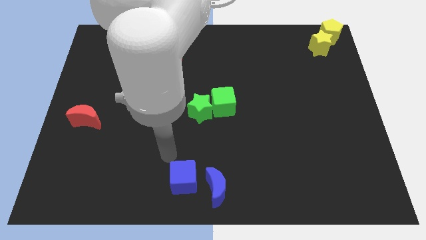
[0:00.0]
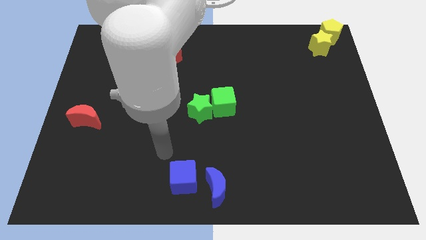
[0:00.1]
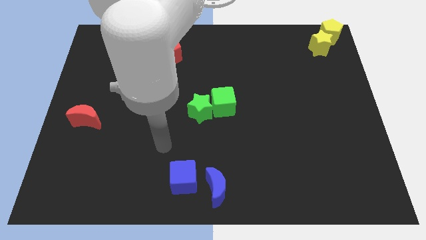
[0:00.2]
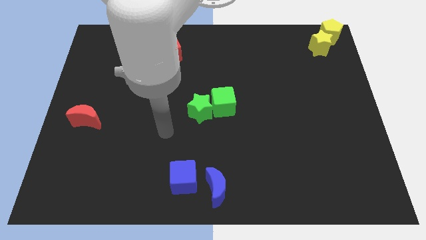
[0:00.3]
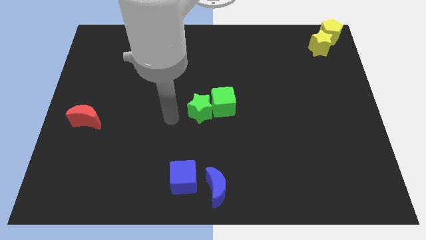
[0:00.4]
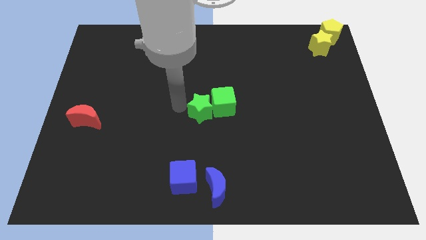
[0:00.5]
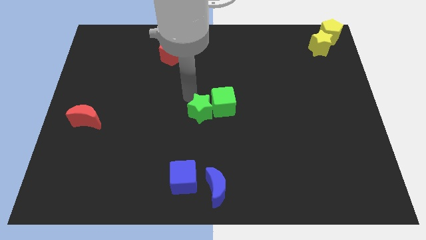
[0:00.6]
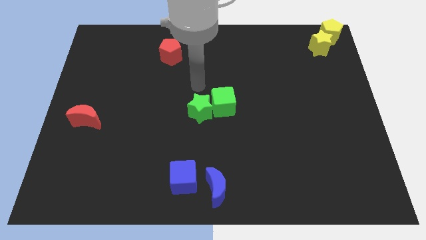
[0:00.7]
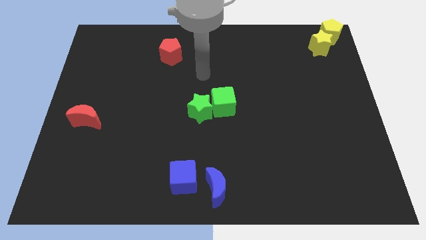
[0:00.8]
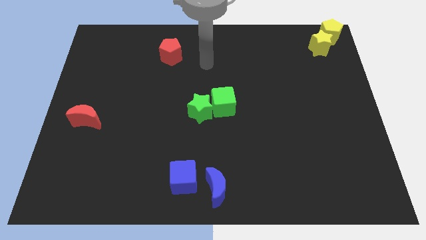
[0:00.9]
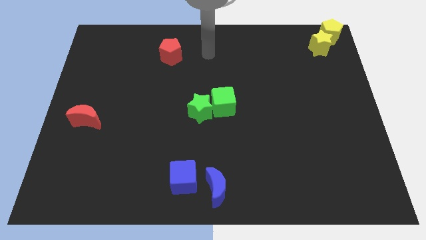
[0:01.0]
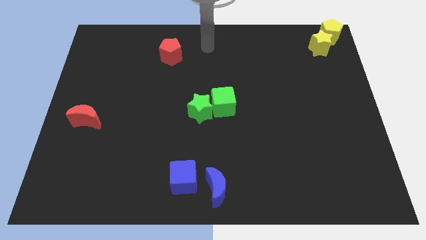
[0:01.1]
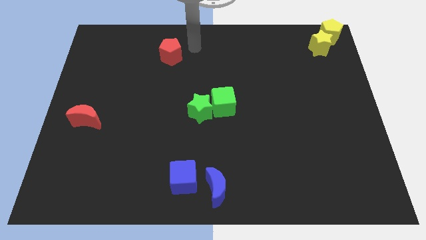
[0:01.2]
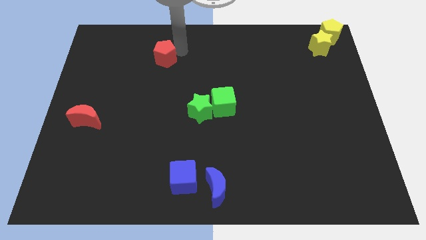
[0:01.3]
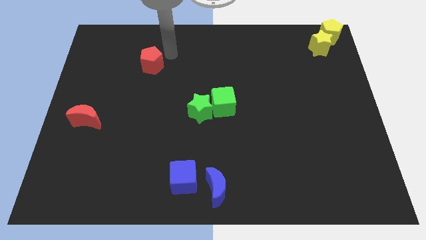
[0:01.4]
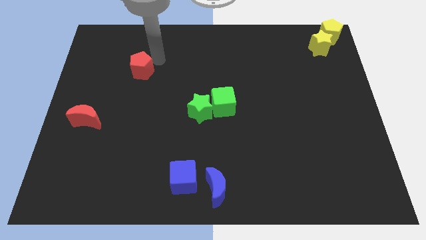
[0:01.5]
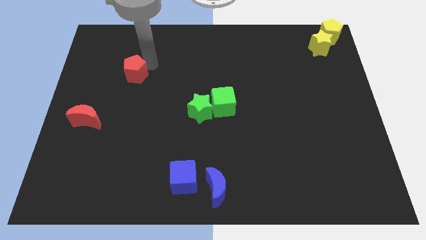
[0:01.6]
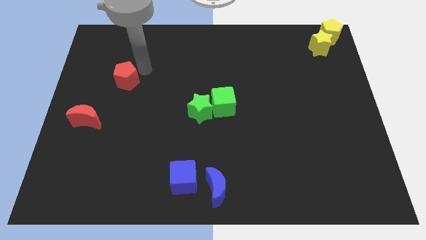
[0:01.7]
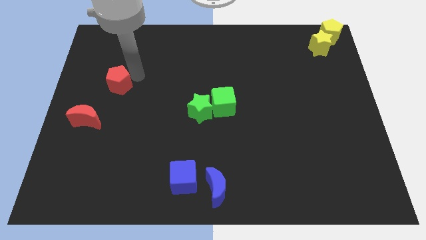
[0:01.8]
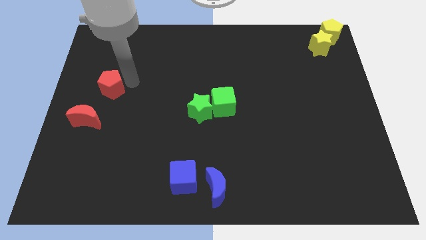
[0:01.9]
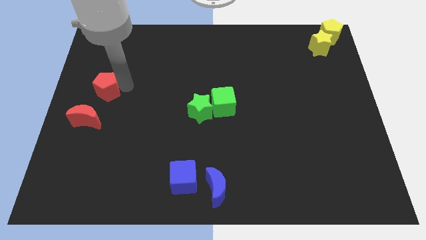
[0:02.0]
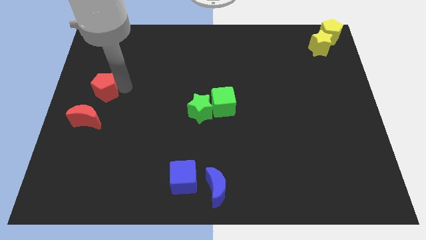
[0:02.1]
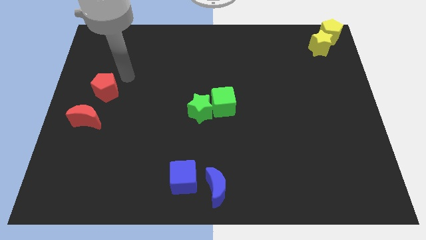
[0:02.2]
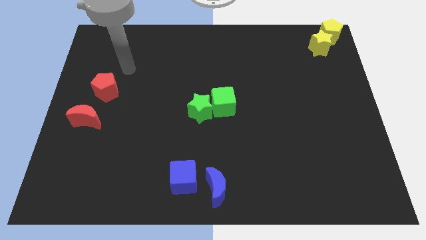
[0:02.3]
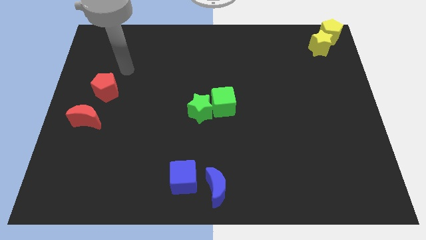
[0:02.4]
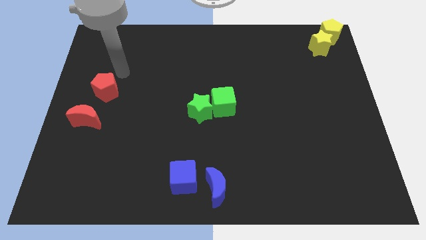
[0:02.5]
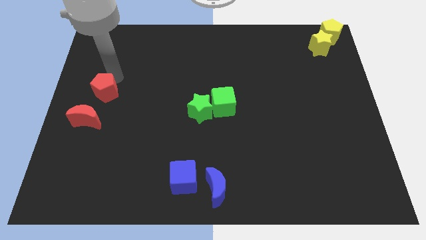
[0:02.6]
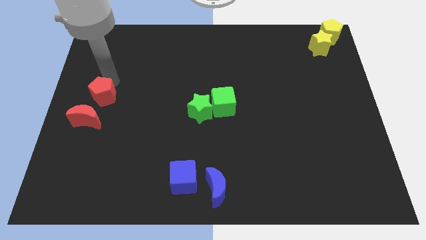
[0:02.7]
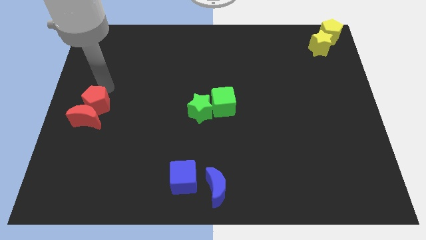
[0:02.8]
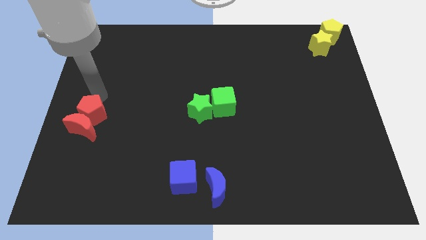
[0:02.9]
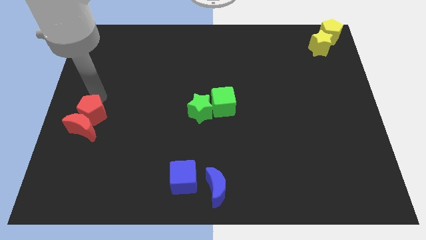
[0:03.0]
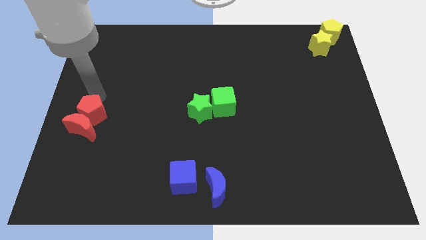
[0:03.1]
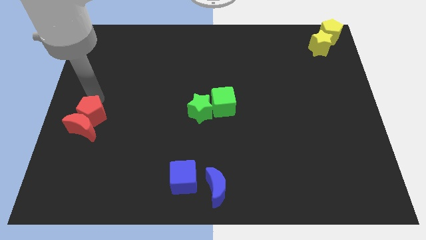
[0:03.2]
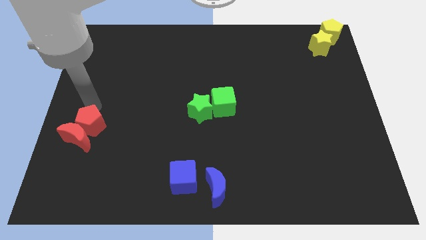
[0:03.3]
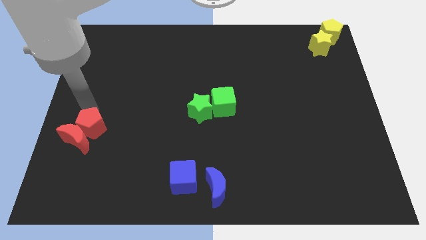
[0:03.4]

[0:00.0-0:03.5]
slide the red pentagon into the red moon

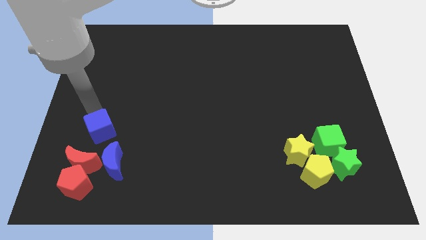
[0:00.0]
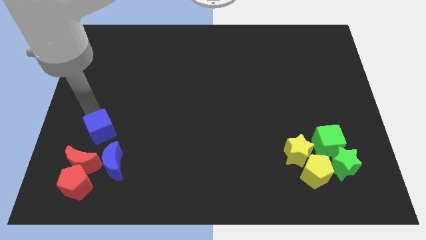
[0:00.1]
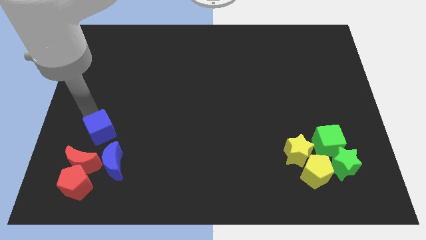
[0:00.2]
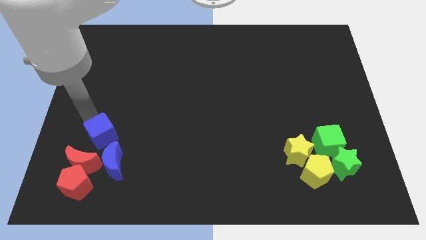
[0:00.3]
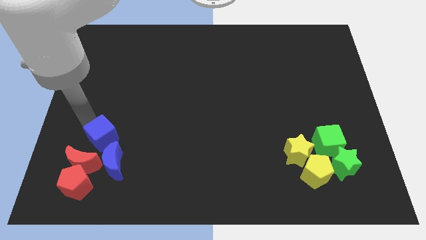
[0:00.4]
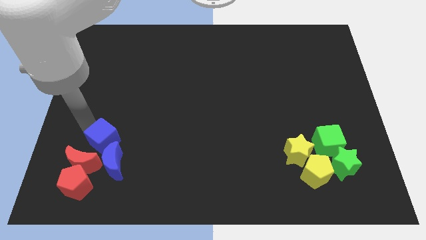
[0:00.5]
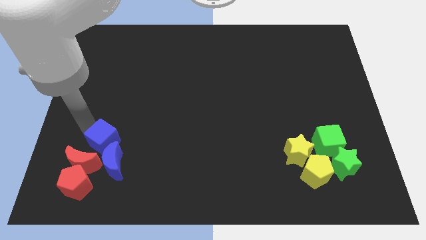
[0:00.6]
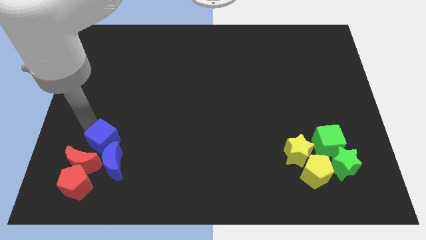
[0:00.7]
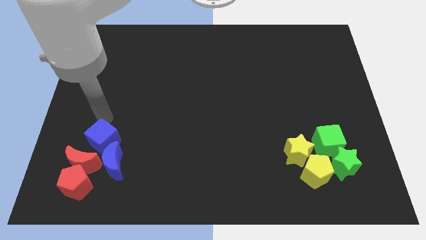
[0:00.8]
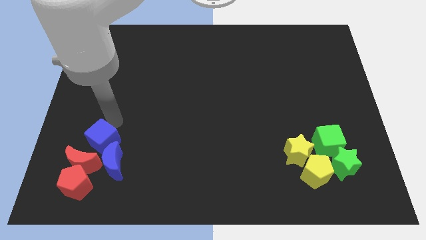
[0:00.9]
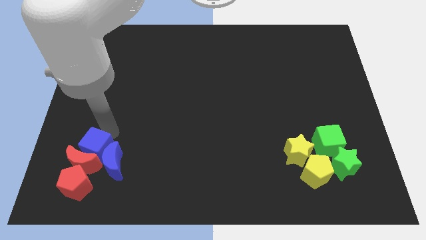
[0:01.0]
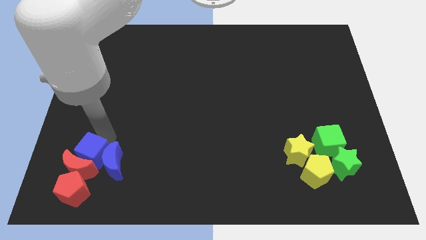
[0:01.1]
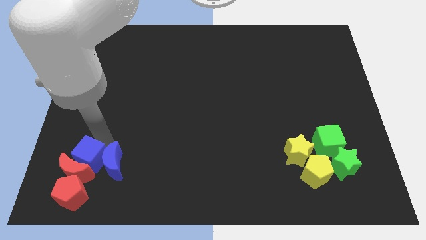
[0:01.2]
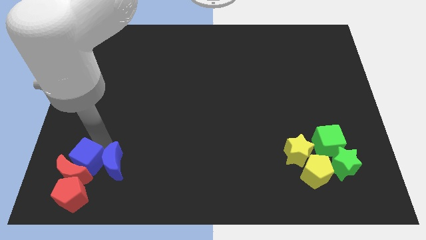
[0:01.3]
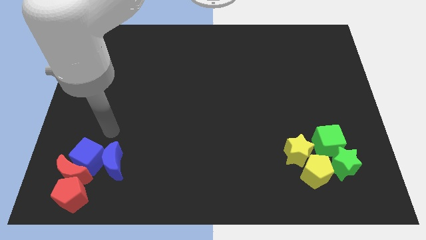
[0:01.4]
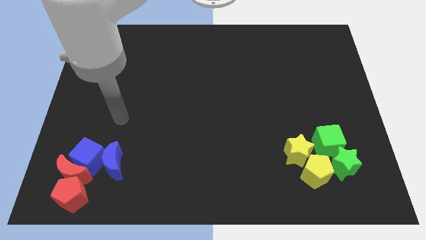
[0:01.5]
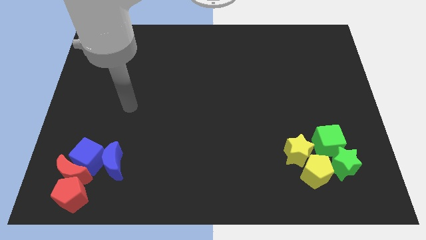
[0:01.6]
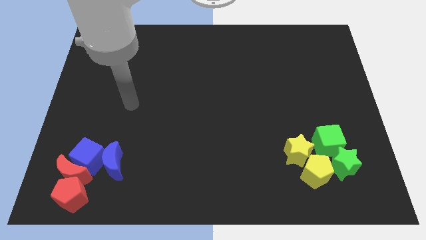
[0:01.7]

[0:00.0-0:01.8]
move the blue cube into the red crescent

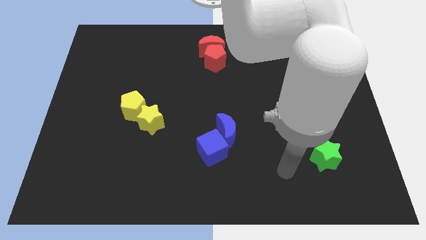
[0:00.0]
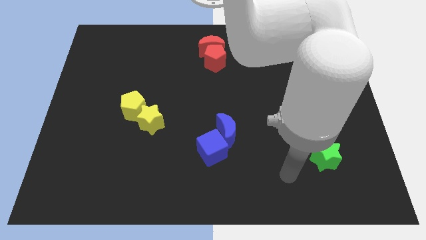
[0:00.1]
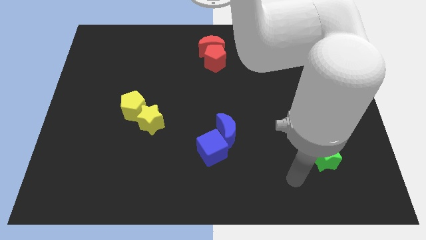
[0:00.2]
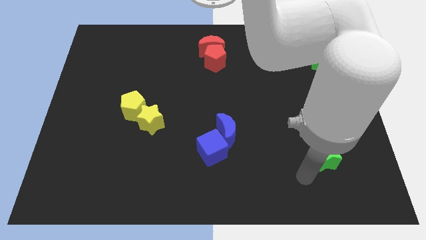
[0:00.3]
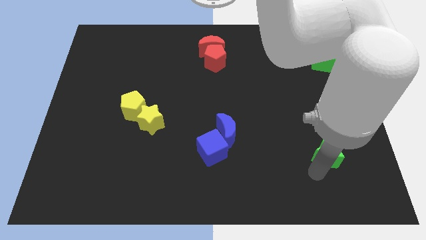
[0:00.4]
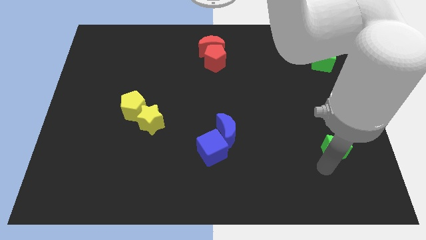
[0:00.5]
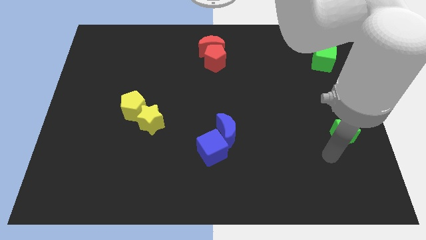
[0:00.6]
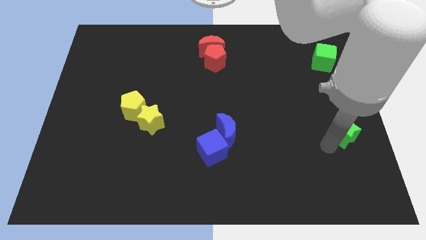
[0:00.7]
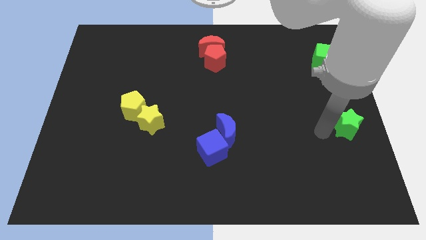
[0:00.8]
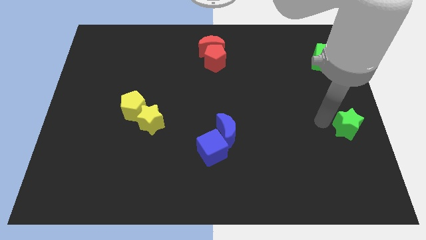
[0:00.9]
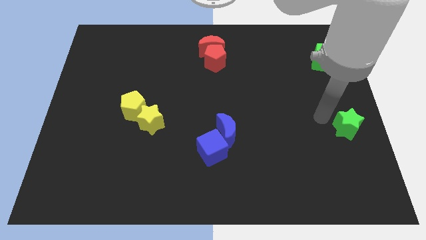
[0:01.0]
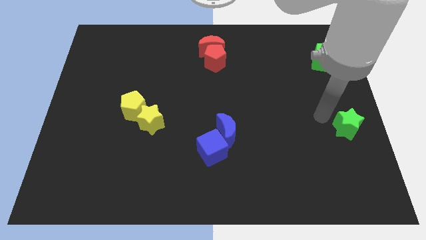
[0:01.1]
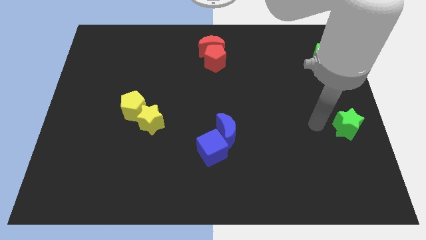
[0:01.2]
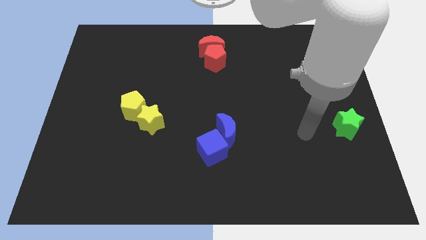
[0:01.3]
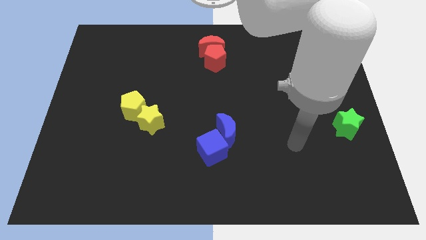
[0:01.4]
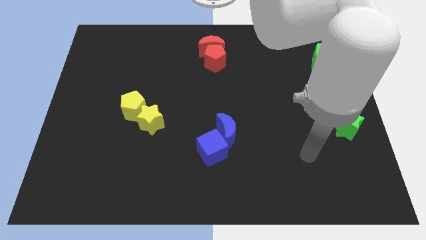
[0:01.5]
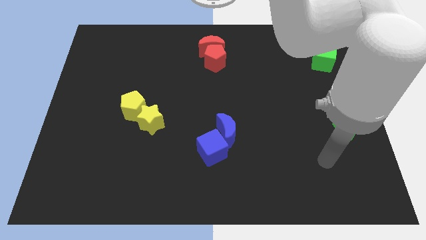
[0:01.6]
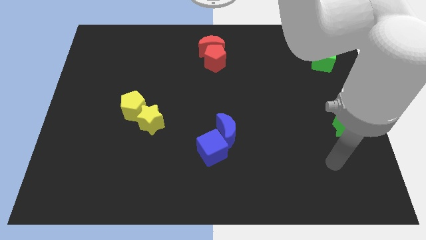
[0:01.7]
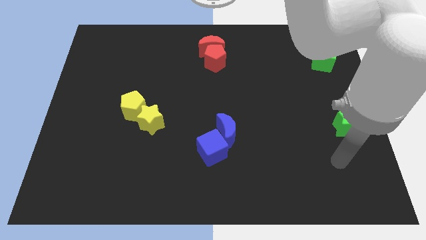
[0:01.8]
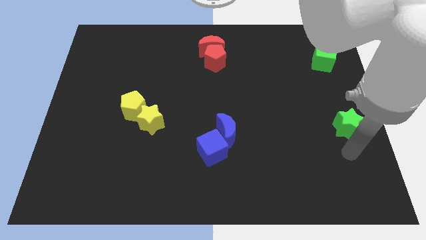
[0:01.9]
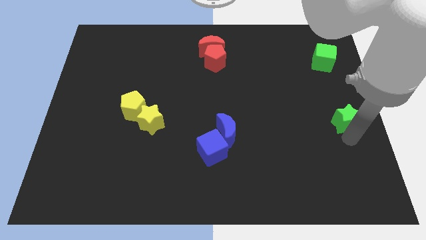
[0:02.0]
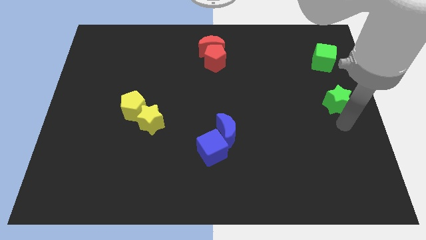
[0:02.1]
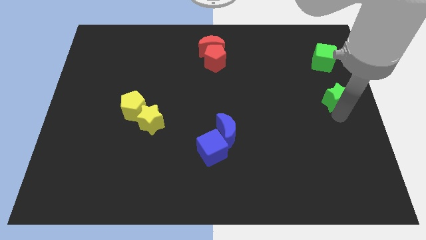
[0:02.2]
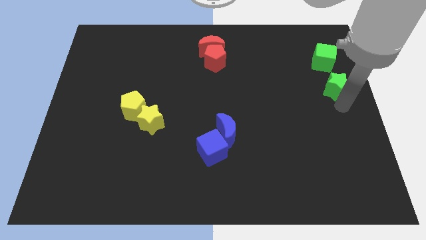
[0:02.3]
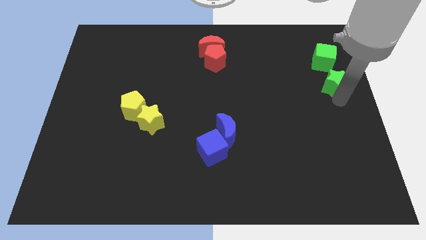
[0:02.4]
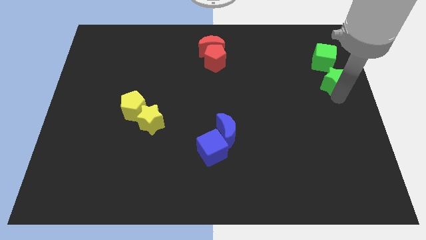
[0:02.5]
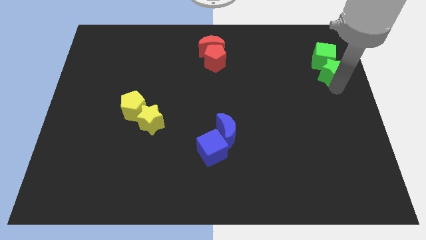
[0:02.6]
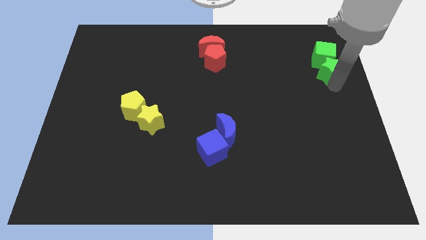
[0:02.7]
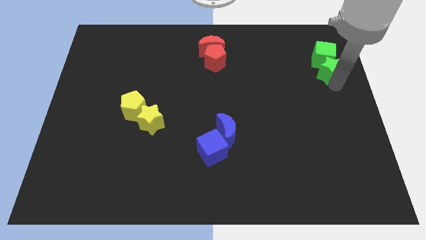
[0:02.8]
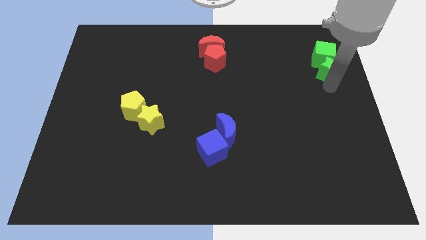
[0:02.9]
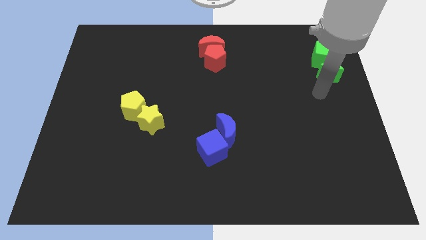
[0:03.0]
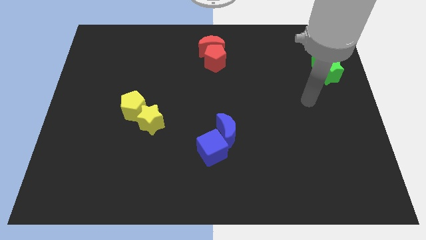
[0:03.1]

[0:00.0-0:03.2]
push green star into green cube

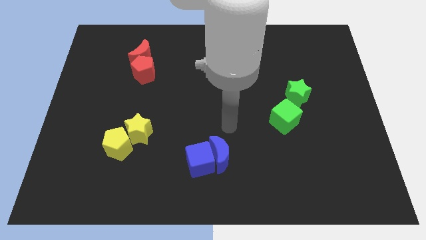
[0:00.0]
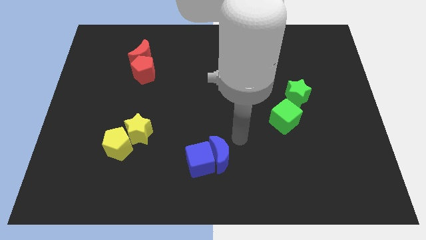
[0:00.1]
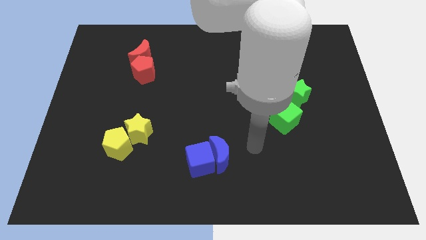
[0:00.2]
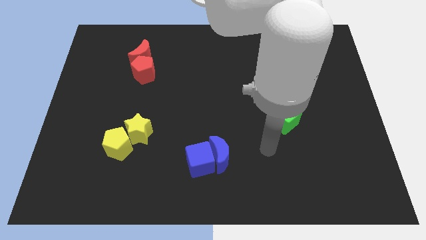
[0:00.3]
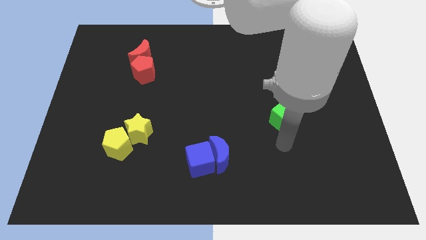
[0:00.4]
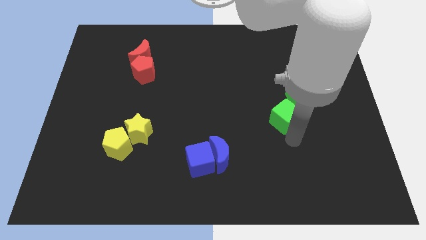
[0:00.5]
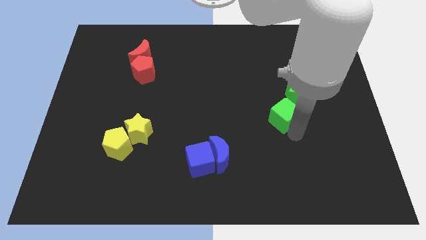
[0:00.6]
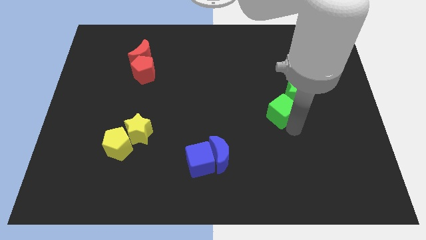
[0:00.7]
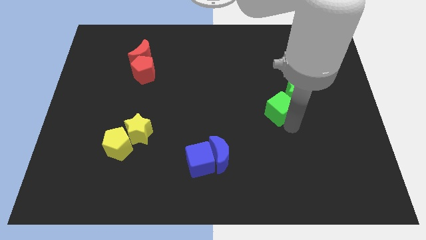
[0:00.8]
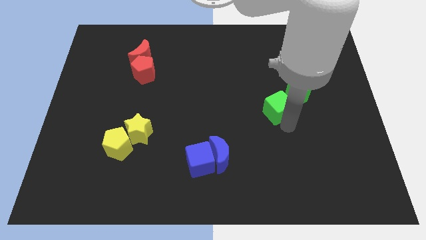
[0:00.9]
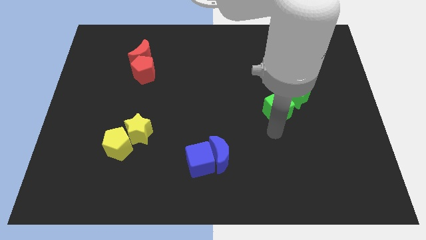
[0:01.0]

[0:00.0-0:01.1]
move the green cube slightly up
